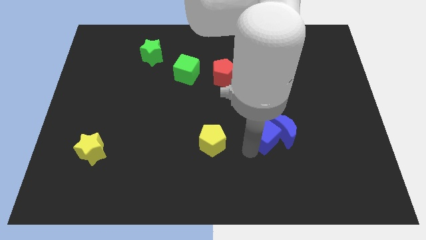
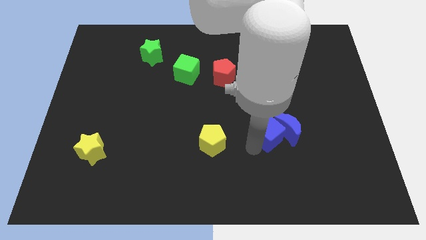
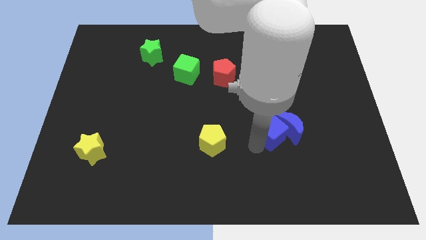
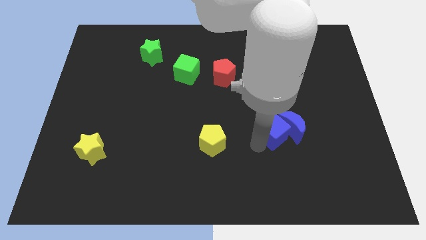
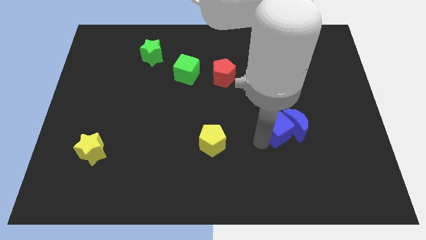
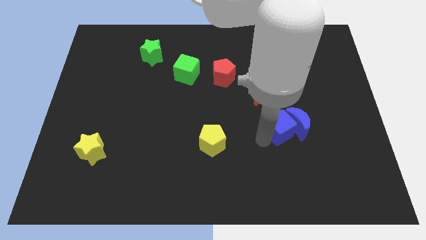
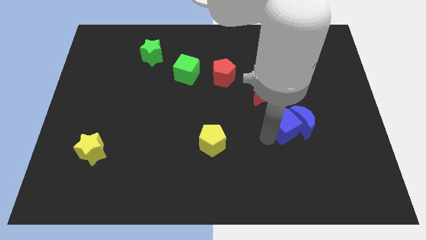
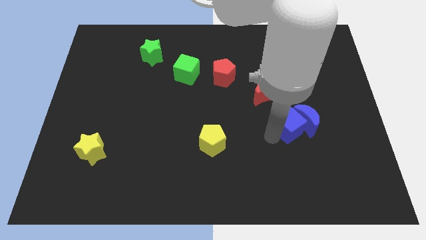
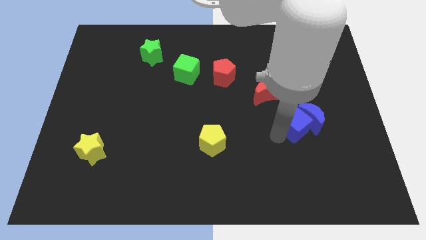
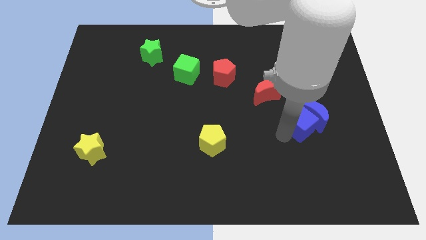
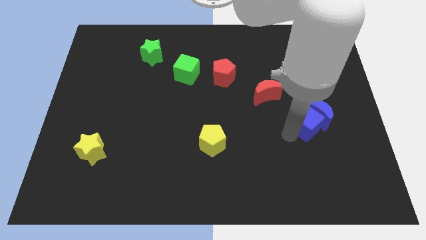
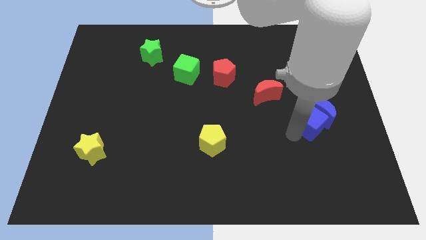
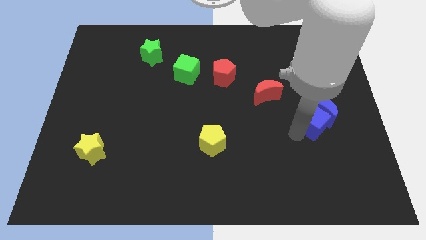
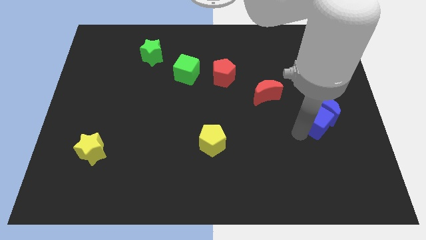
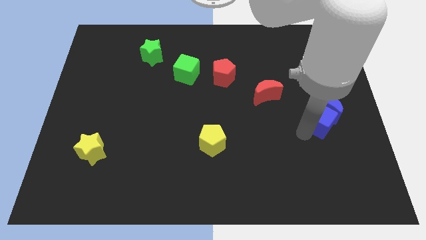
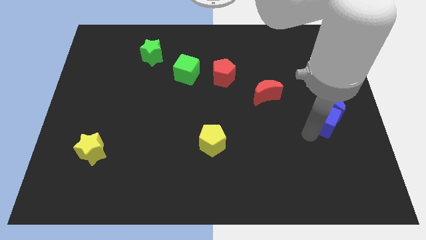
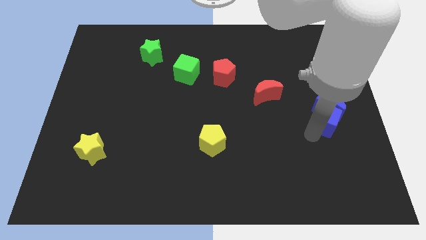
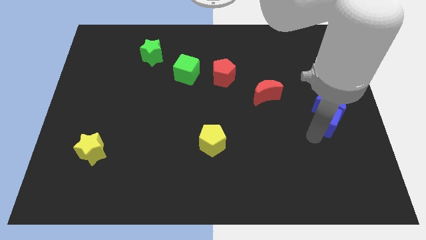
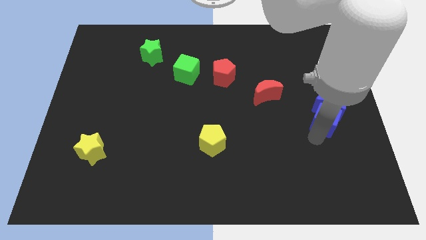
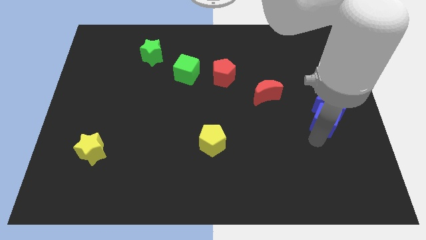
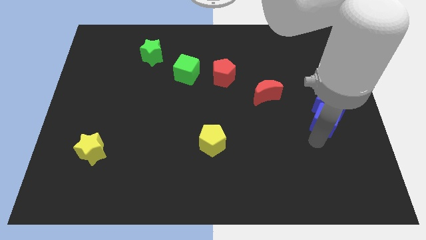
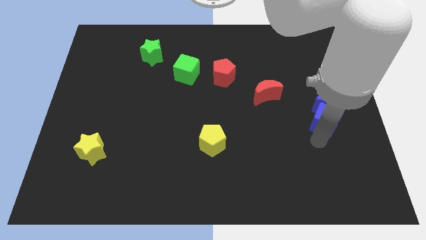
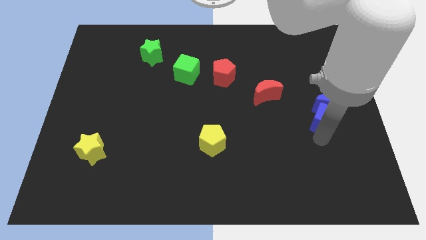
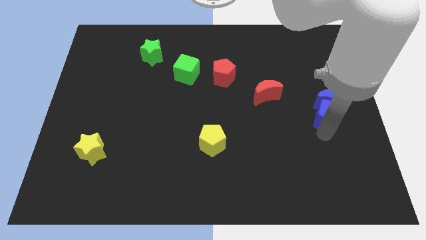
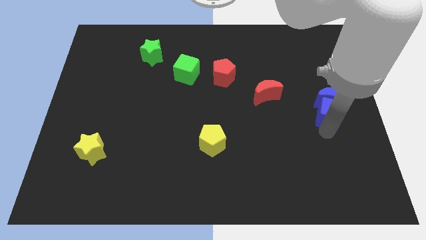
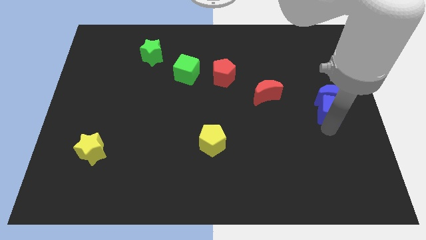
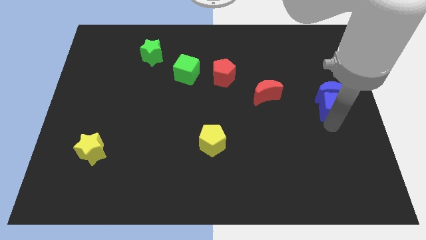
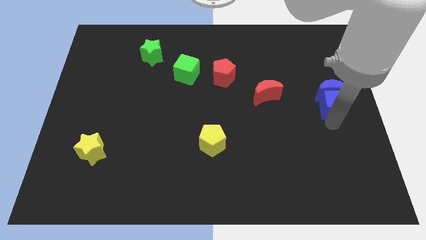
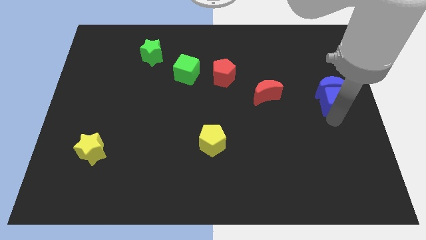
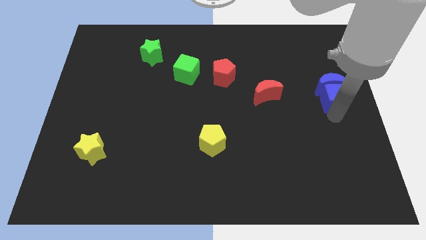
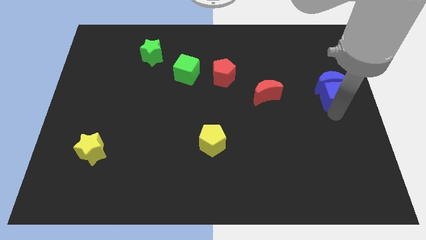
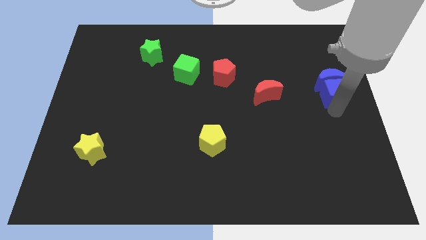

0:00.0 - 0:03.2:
push the blue blocks towards center right of the board

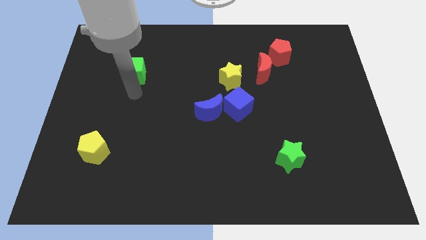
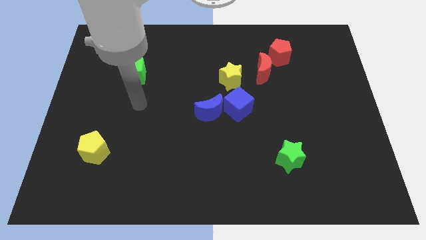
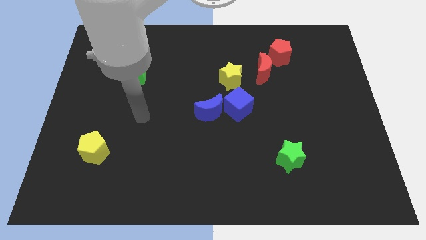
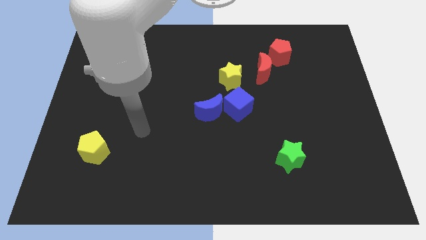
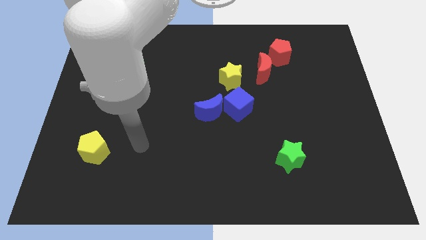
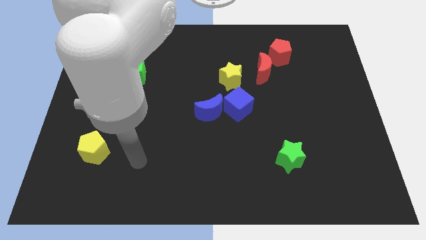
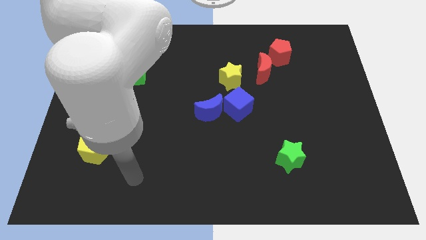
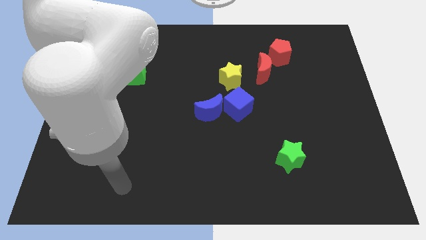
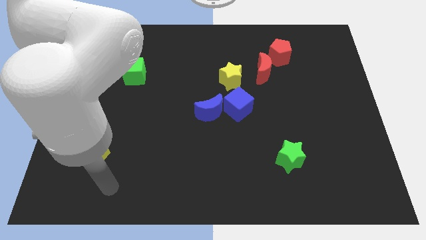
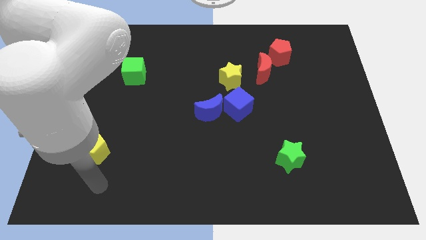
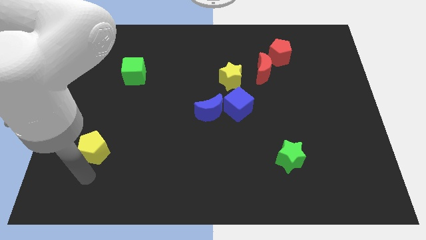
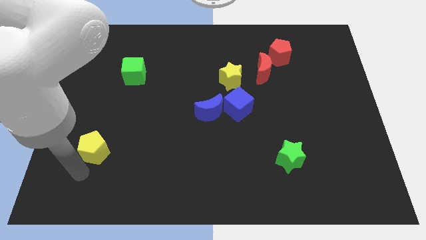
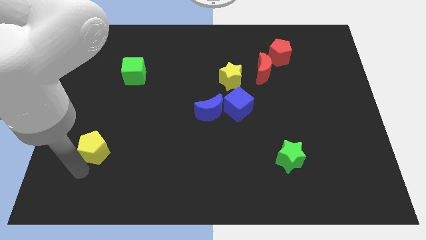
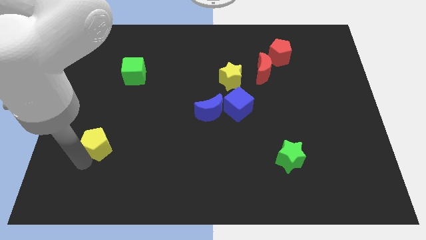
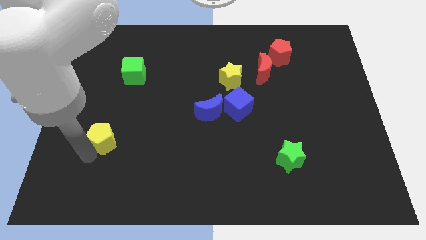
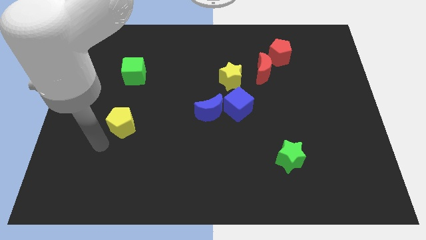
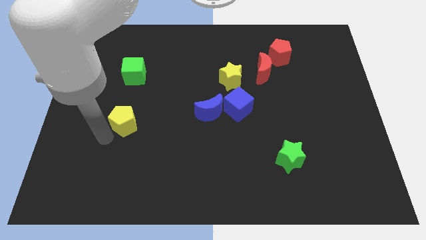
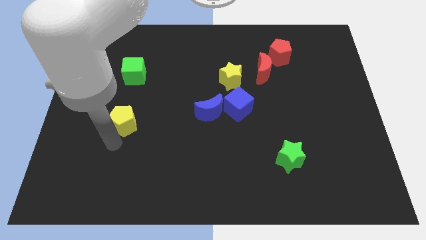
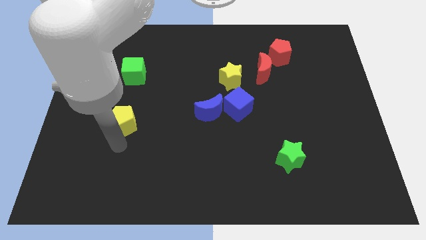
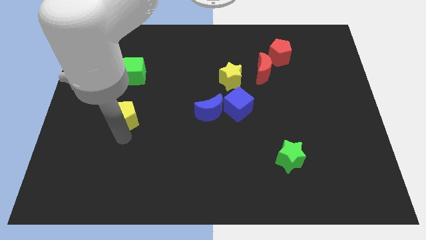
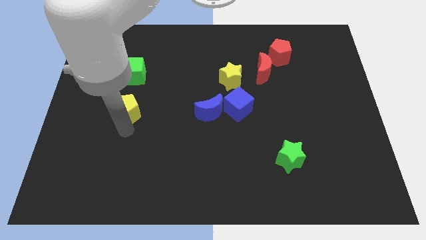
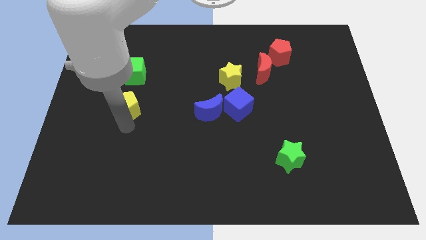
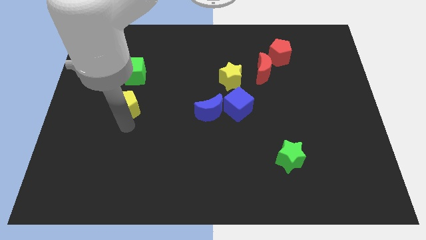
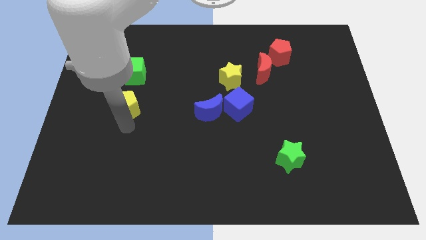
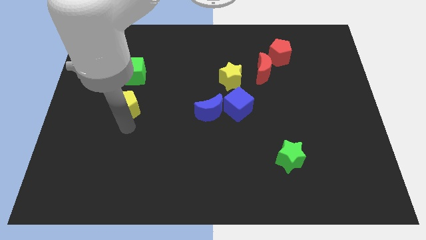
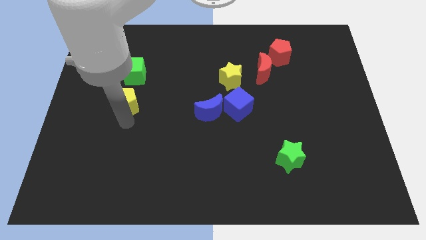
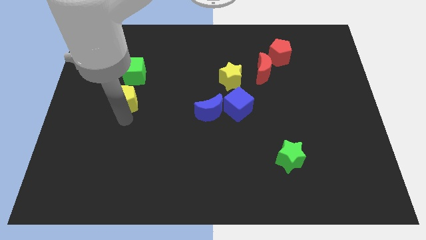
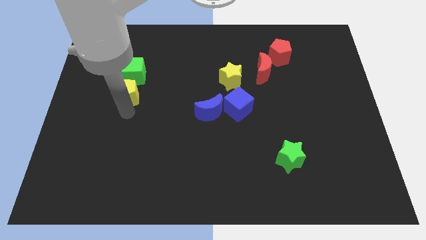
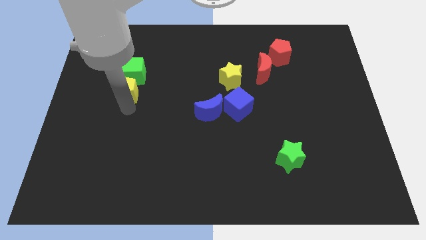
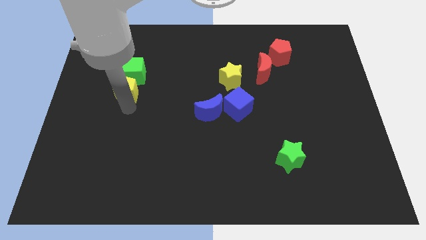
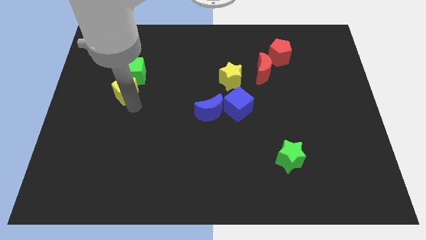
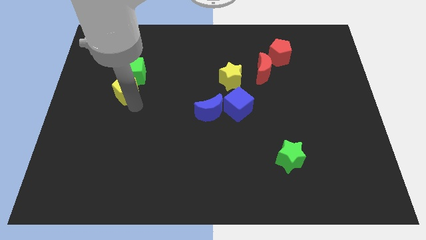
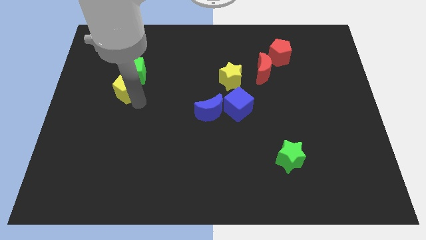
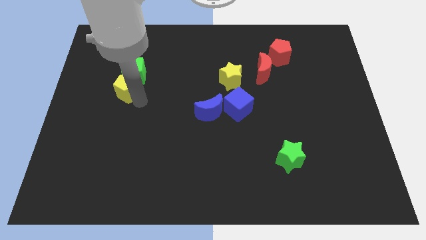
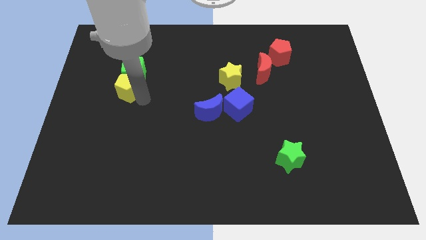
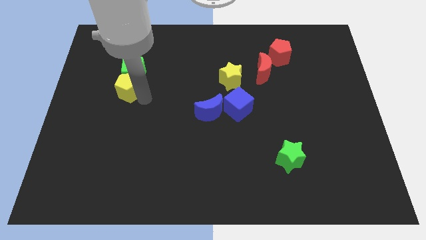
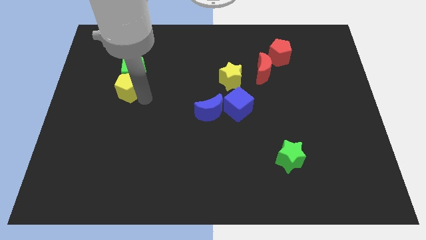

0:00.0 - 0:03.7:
push the yellow pentagon into the bottom side of the green cube

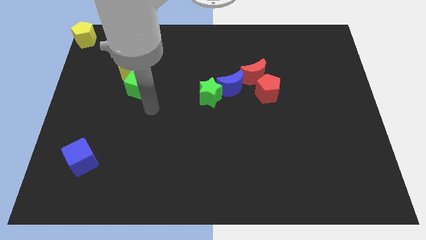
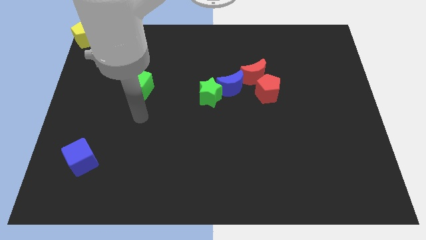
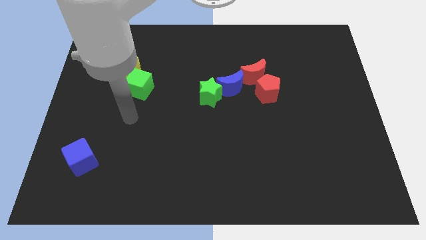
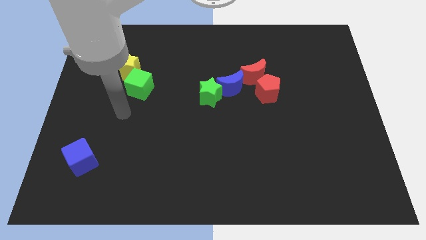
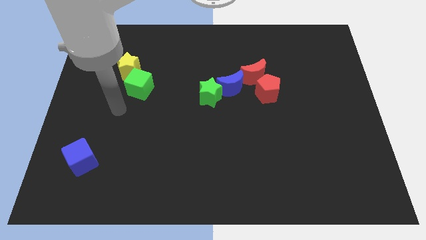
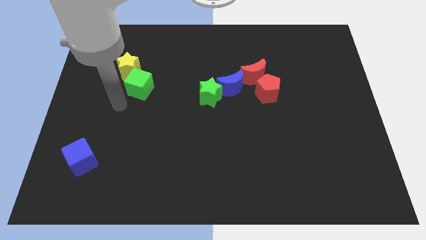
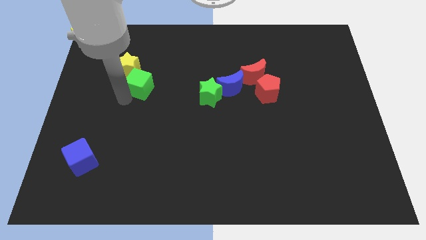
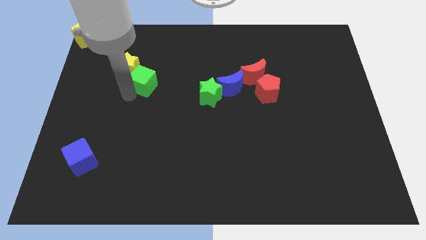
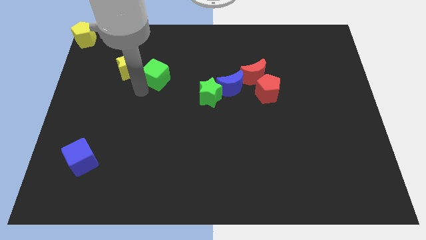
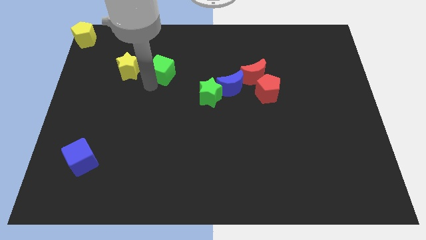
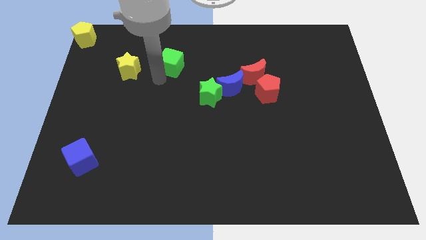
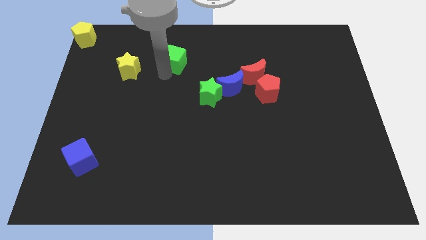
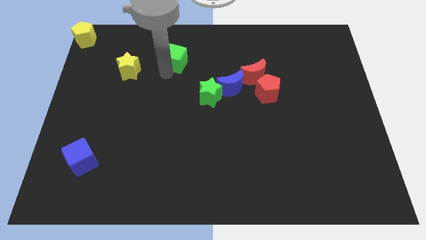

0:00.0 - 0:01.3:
move green cube slightly up

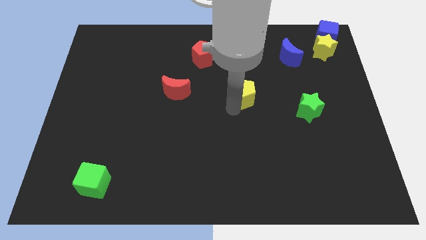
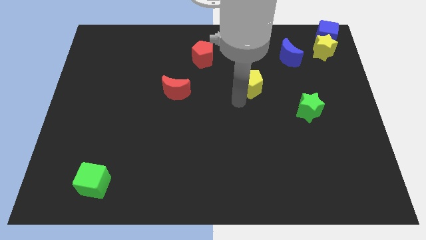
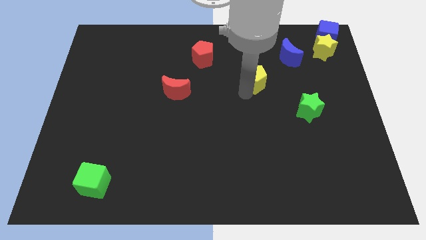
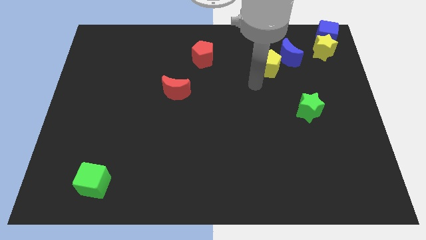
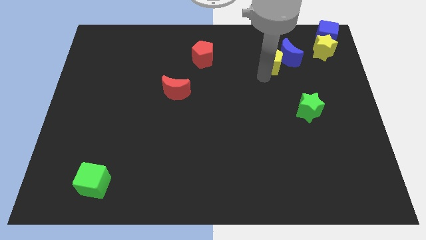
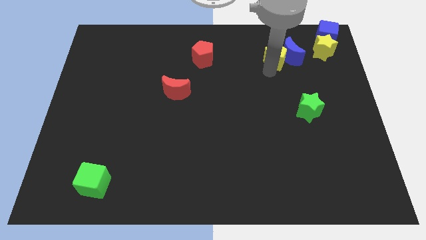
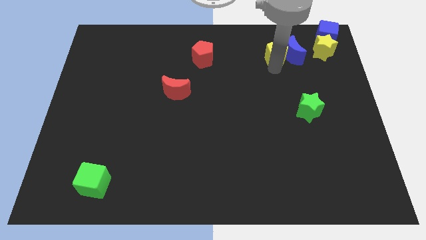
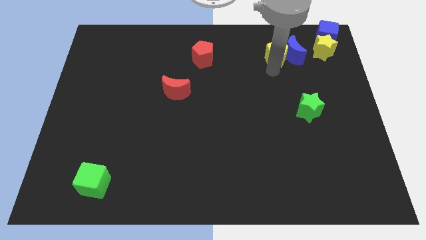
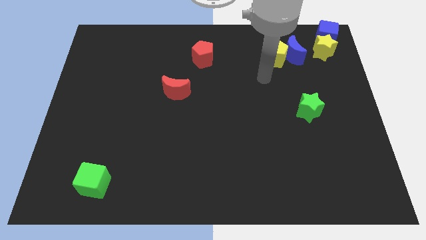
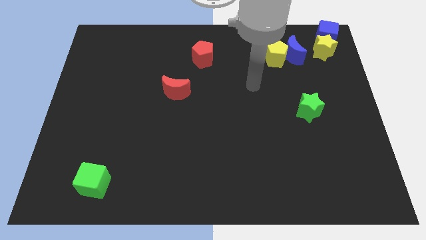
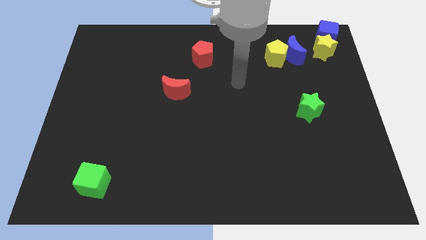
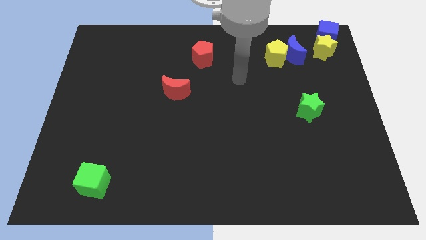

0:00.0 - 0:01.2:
push the yellow pentagon into the blue crescent
